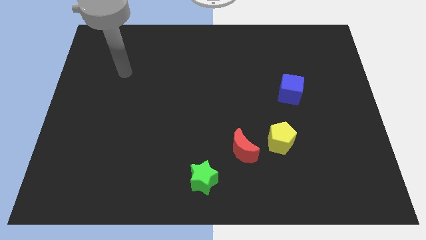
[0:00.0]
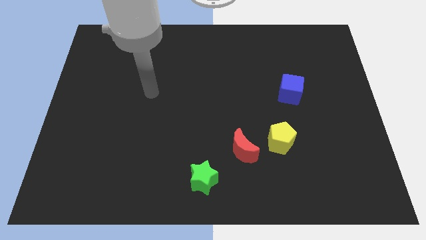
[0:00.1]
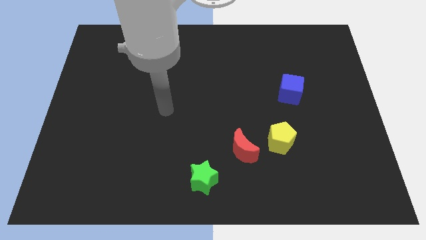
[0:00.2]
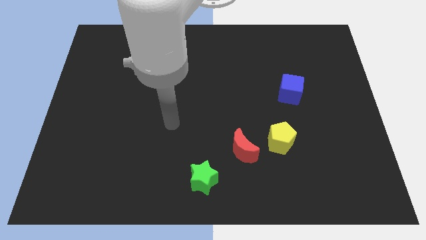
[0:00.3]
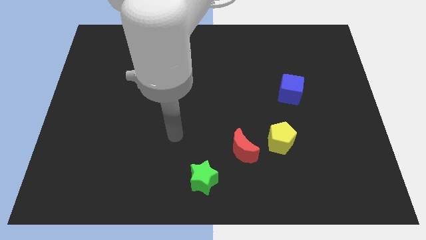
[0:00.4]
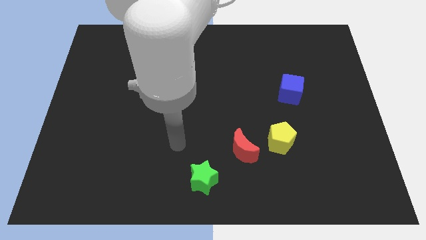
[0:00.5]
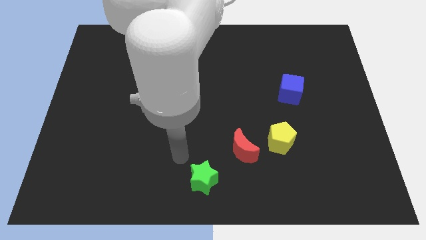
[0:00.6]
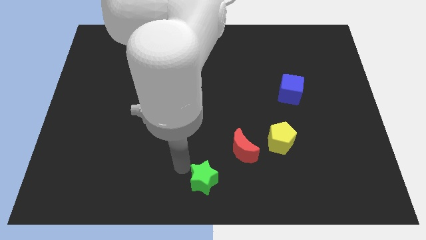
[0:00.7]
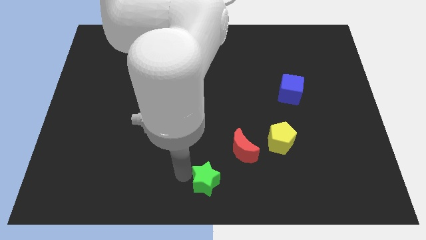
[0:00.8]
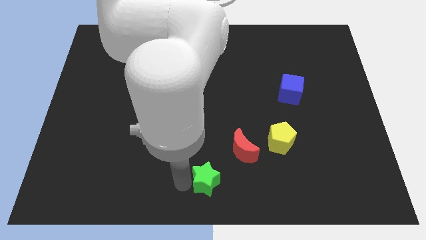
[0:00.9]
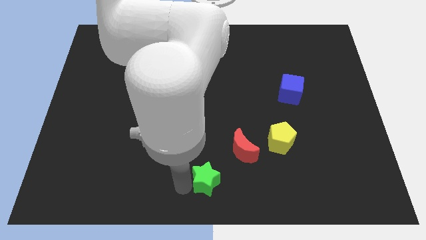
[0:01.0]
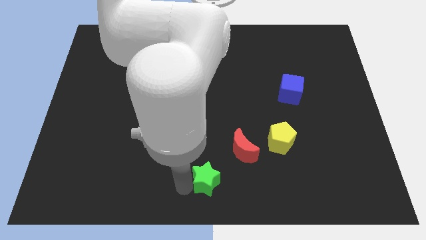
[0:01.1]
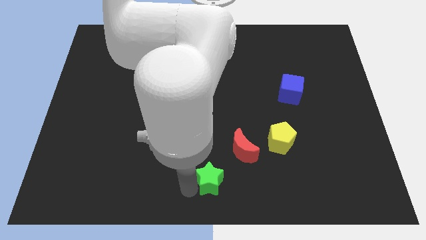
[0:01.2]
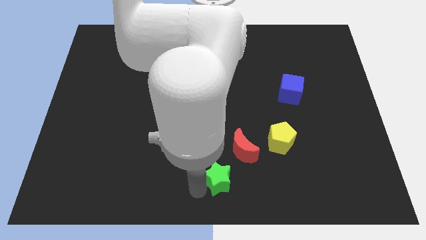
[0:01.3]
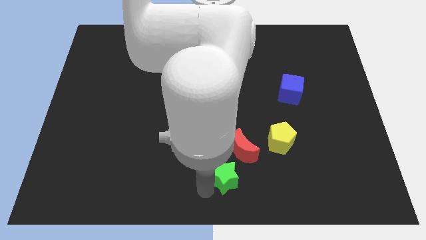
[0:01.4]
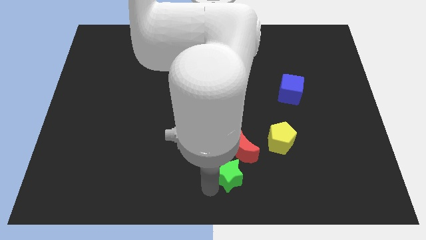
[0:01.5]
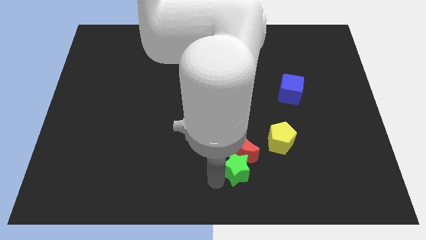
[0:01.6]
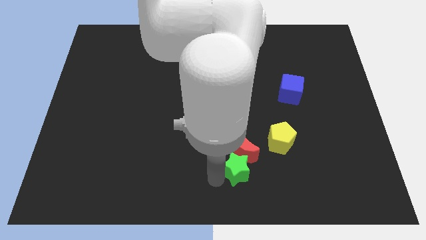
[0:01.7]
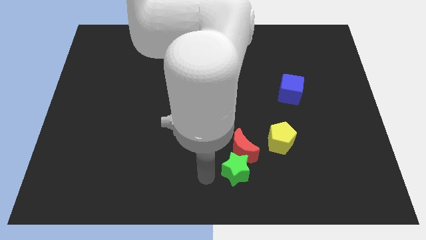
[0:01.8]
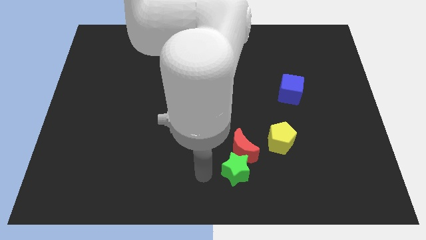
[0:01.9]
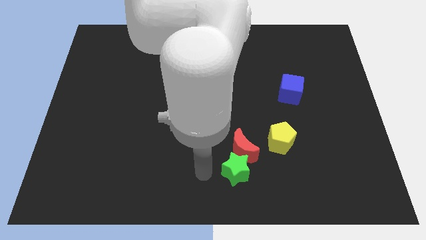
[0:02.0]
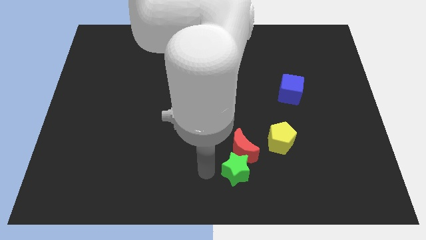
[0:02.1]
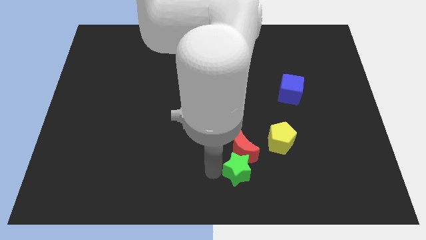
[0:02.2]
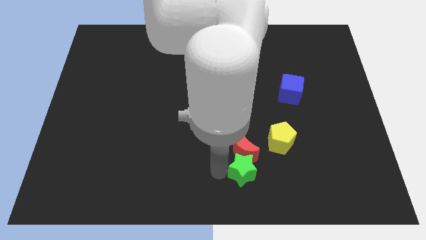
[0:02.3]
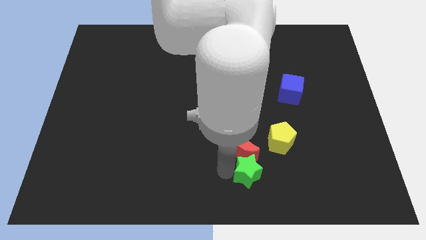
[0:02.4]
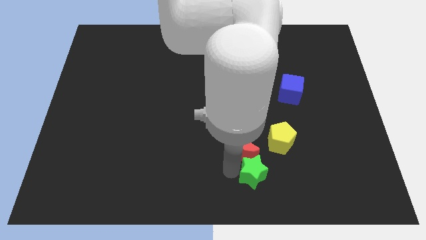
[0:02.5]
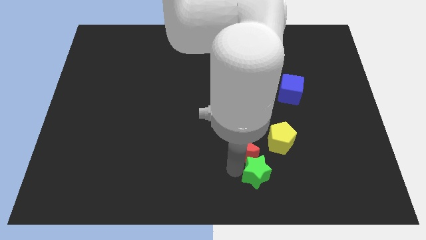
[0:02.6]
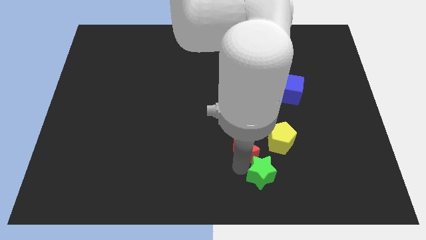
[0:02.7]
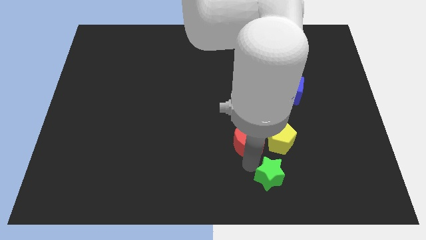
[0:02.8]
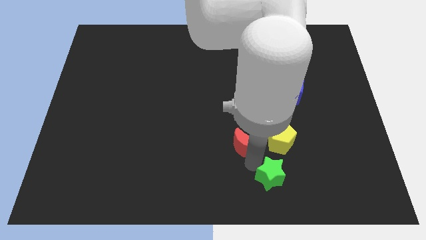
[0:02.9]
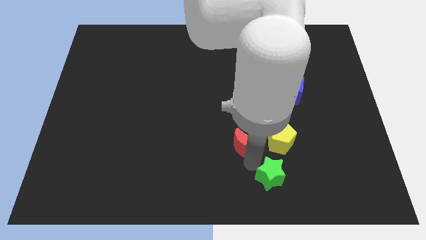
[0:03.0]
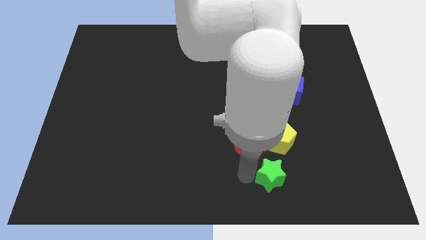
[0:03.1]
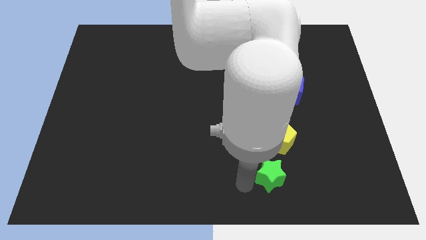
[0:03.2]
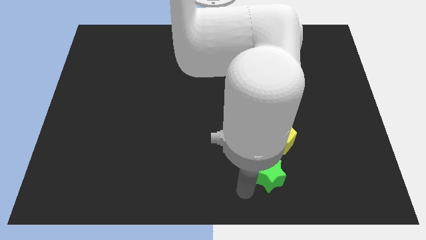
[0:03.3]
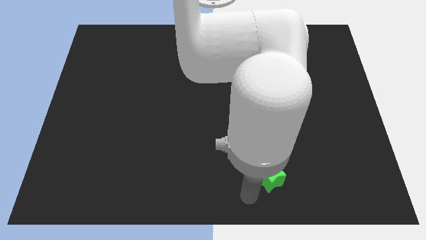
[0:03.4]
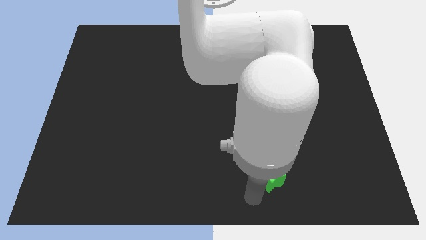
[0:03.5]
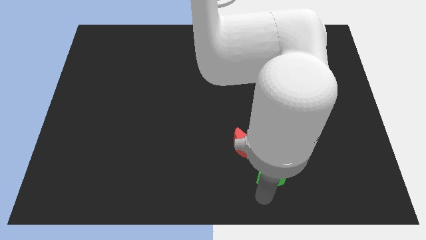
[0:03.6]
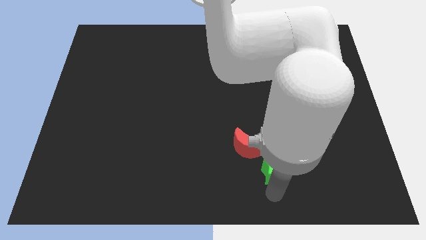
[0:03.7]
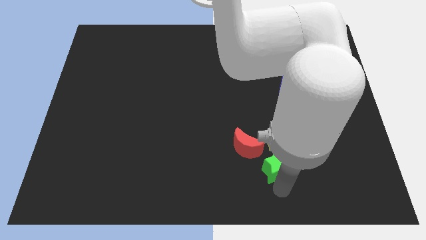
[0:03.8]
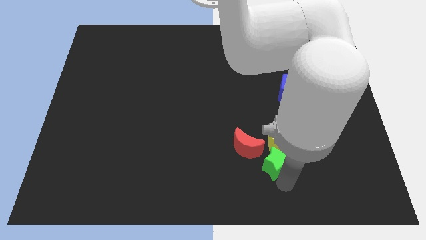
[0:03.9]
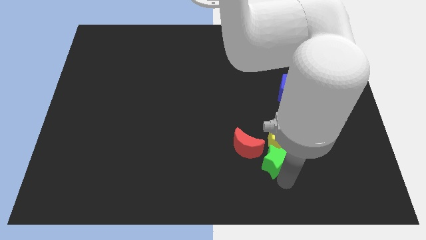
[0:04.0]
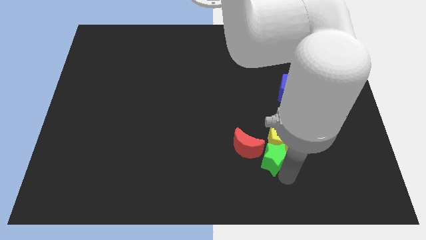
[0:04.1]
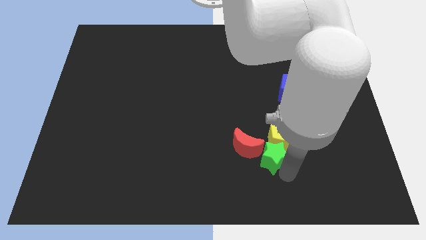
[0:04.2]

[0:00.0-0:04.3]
put the green star close to the yellow block

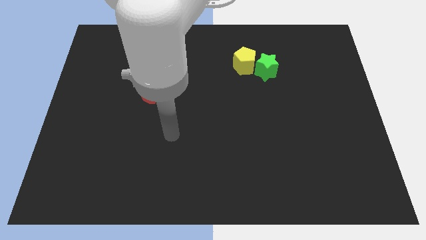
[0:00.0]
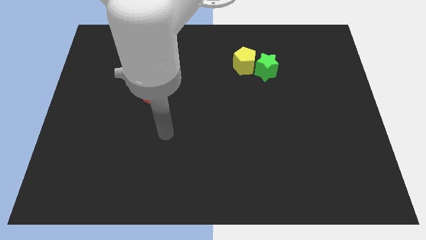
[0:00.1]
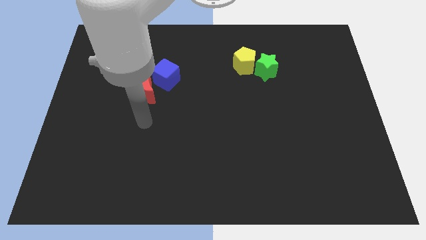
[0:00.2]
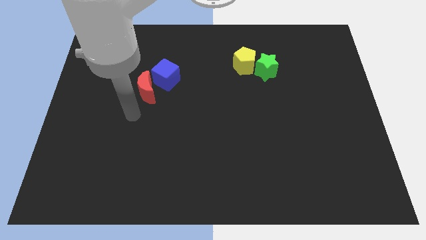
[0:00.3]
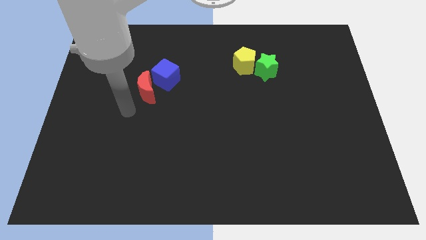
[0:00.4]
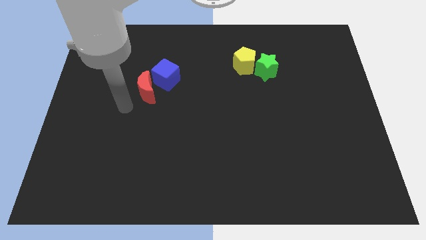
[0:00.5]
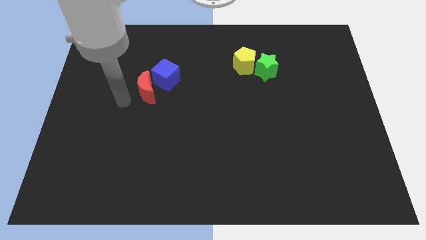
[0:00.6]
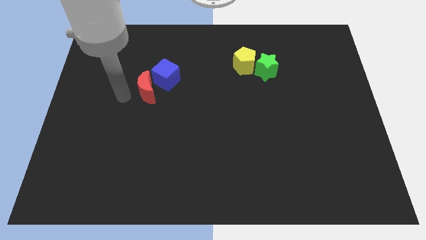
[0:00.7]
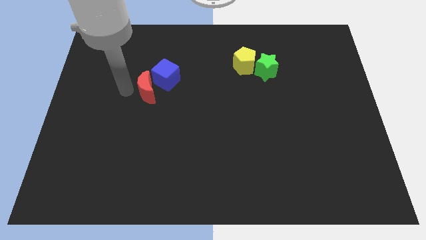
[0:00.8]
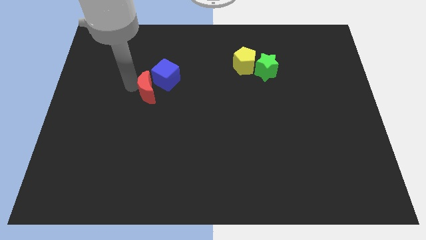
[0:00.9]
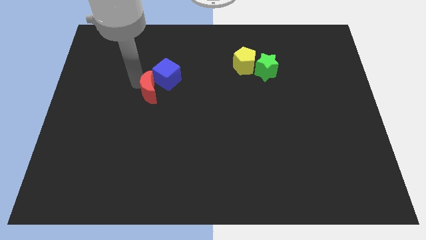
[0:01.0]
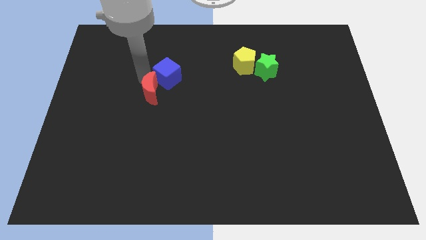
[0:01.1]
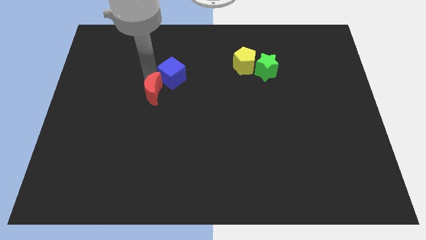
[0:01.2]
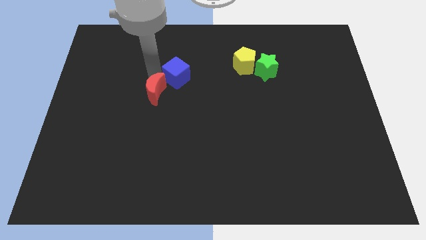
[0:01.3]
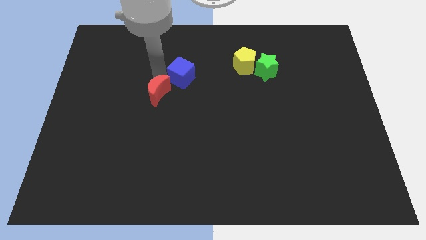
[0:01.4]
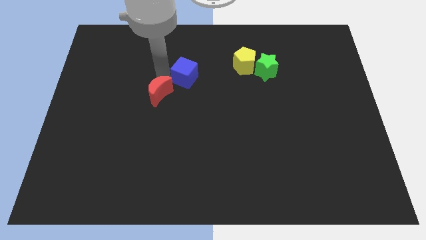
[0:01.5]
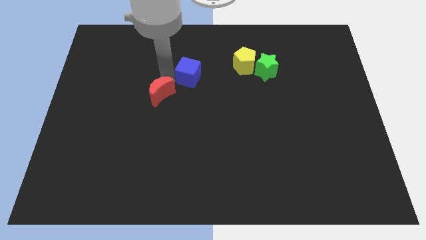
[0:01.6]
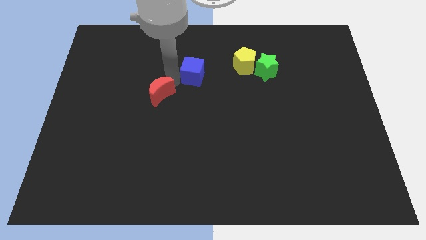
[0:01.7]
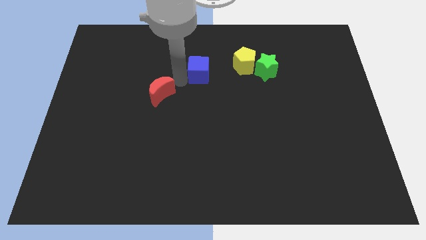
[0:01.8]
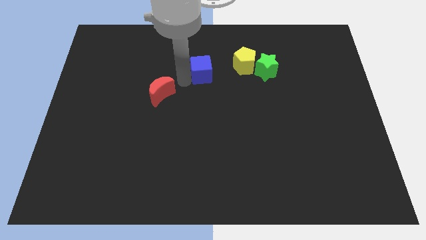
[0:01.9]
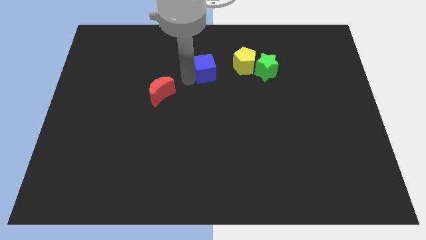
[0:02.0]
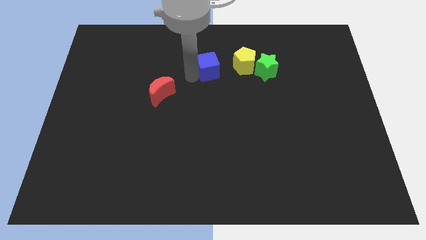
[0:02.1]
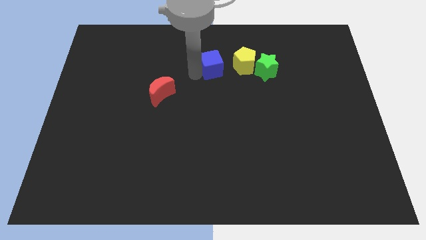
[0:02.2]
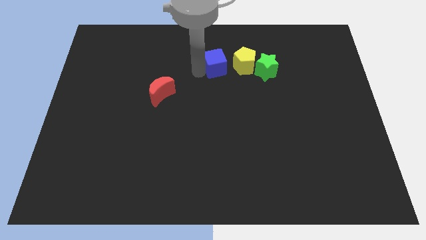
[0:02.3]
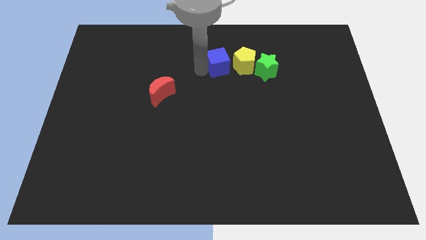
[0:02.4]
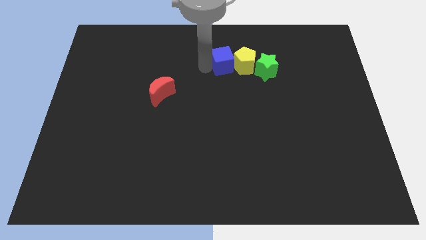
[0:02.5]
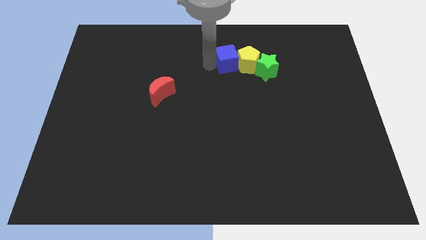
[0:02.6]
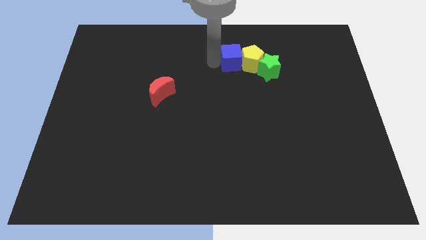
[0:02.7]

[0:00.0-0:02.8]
move the blue cube towards the yellow block

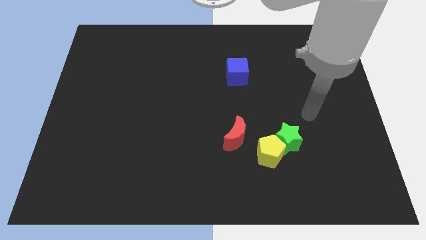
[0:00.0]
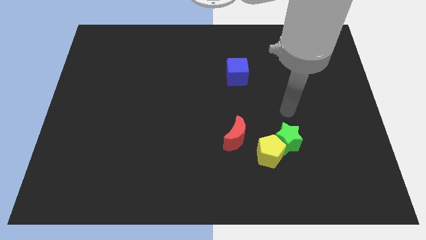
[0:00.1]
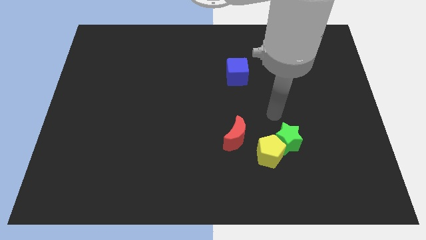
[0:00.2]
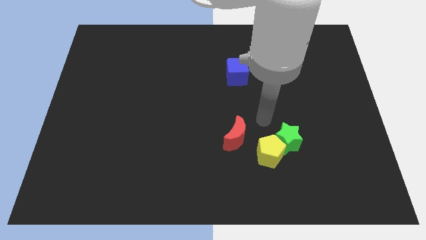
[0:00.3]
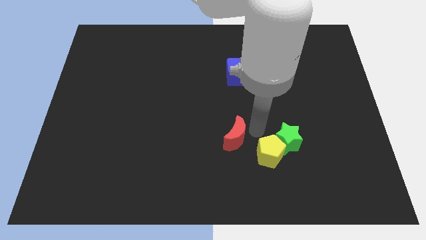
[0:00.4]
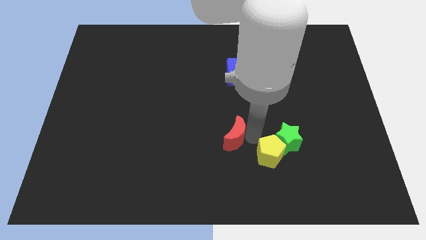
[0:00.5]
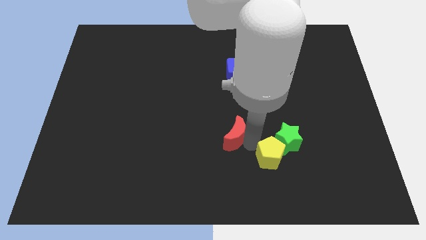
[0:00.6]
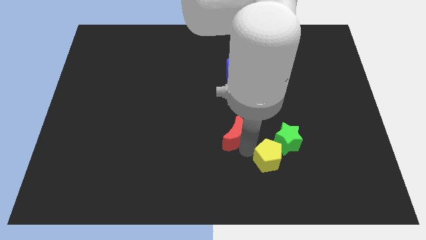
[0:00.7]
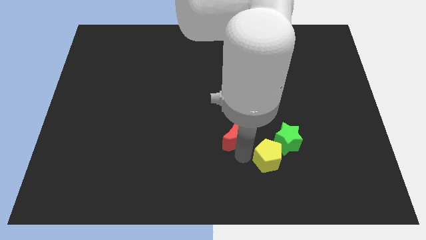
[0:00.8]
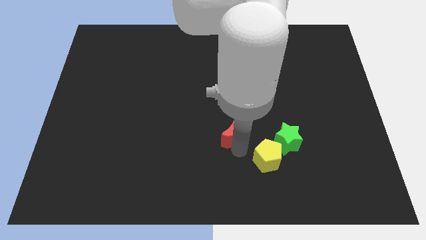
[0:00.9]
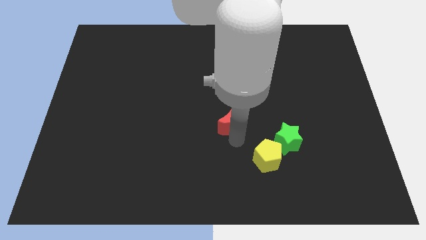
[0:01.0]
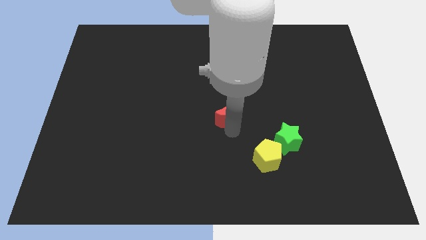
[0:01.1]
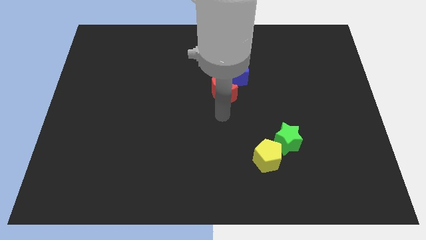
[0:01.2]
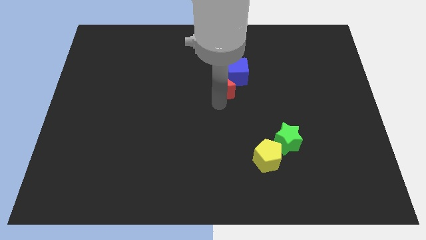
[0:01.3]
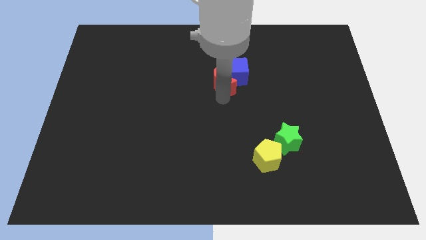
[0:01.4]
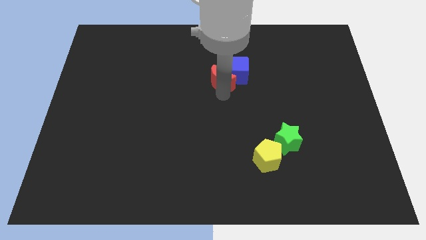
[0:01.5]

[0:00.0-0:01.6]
push the red moon next to the blue block
